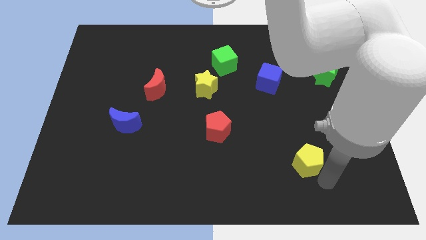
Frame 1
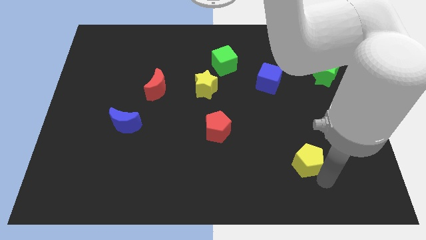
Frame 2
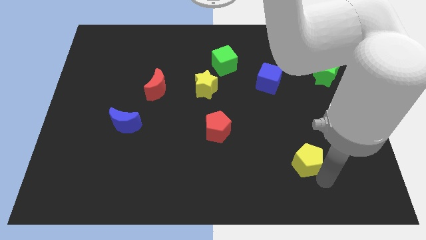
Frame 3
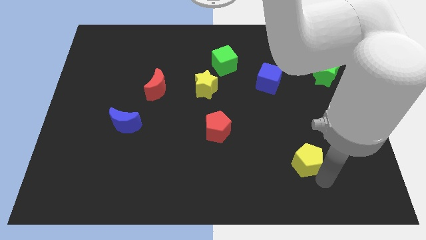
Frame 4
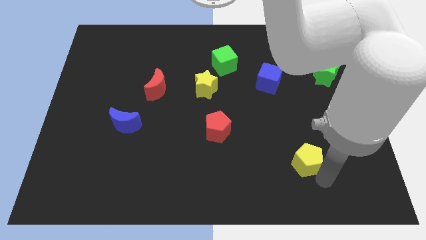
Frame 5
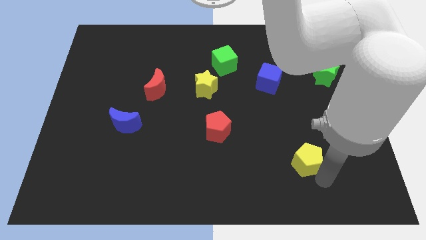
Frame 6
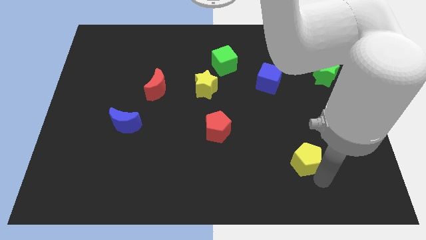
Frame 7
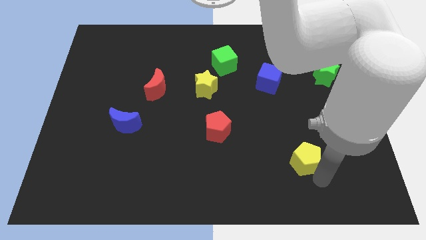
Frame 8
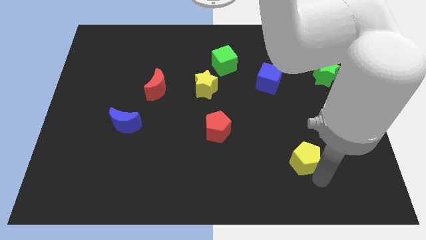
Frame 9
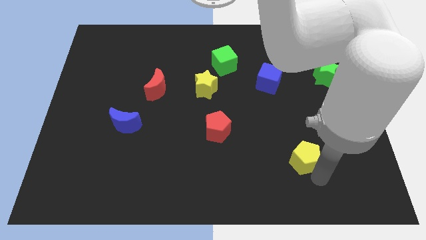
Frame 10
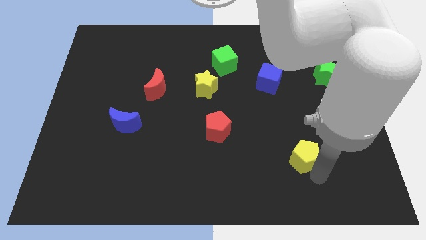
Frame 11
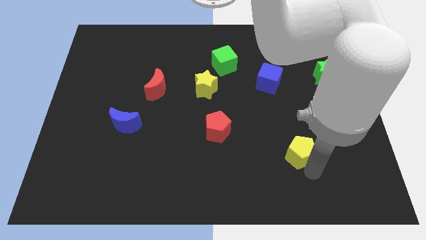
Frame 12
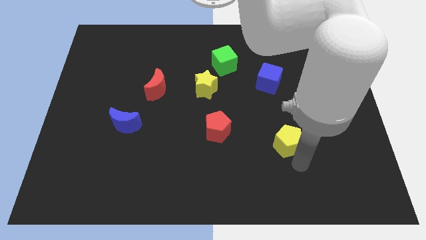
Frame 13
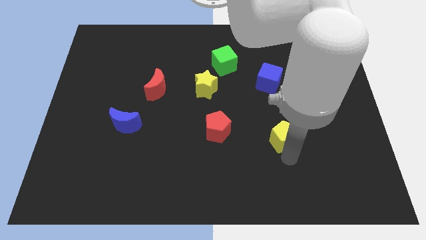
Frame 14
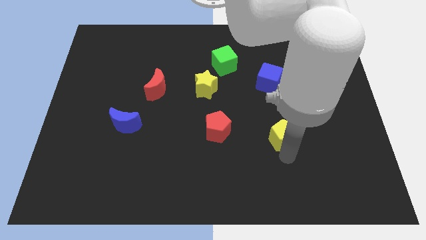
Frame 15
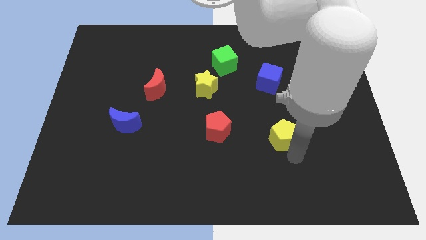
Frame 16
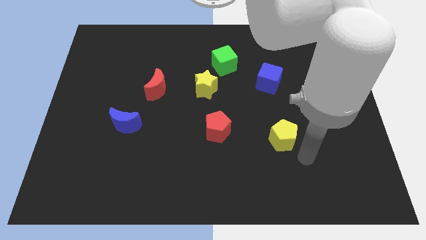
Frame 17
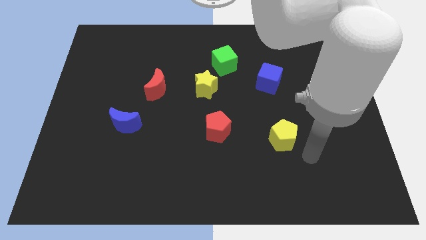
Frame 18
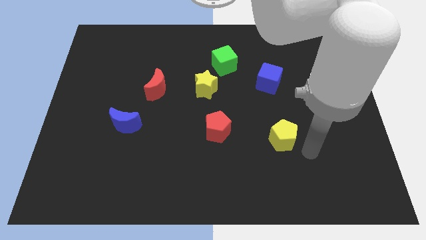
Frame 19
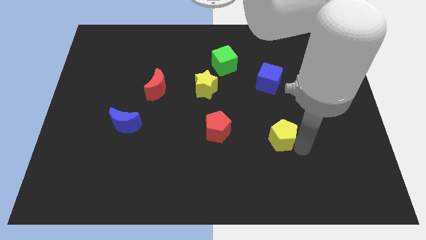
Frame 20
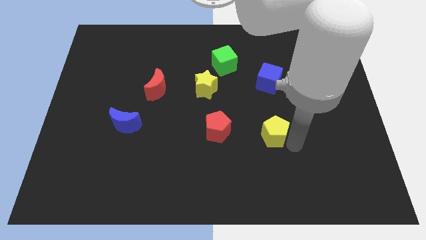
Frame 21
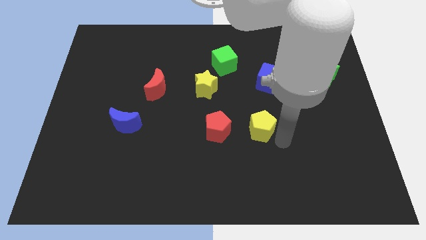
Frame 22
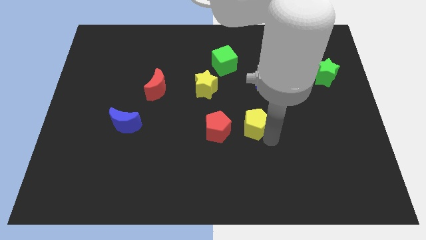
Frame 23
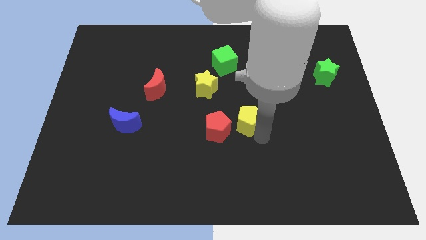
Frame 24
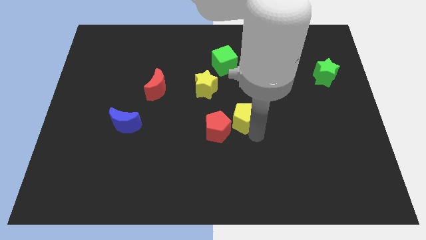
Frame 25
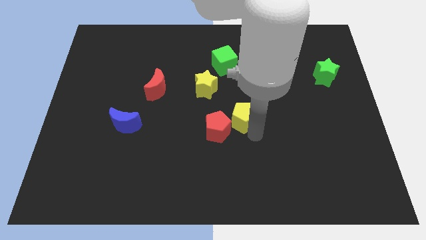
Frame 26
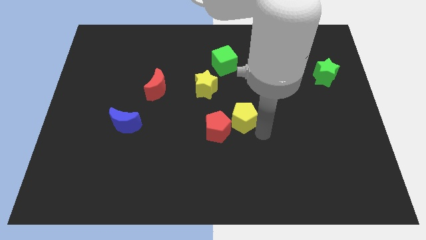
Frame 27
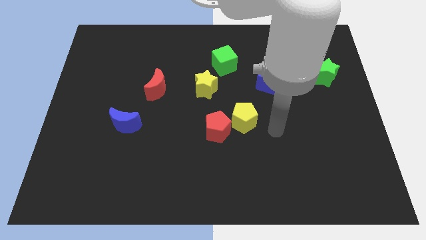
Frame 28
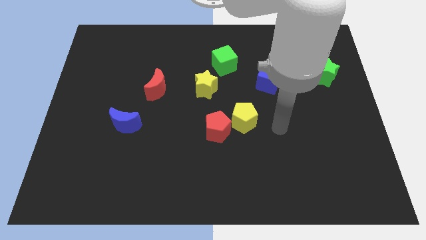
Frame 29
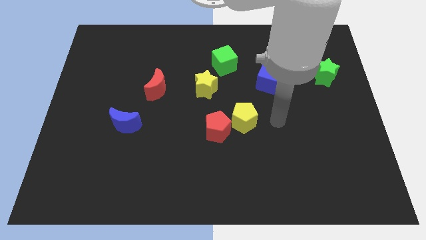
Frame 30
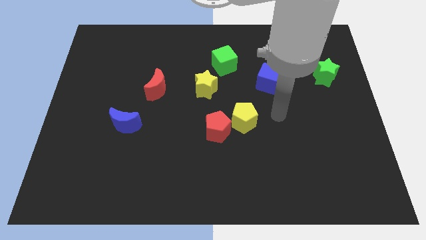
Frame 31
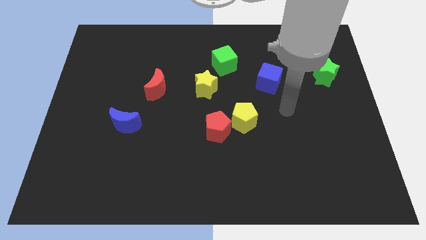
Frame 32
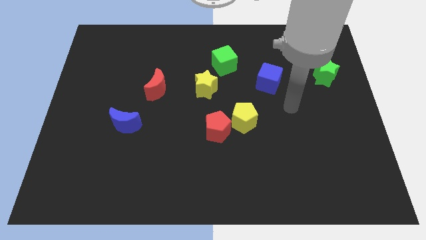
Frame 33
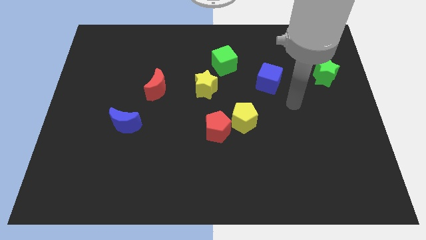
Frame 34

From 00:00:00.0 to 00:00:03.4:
move the yellow pentagon diagonally to the red pentagon

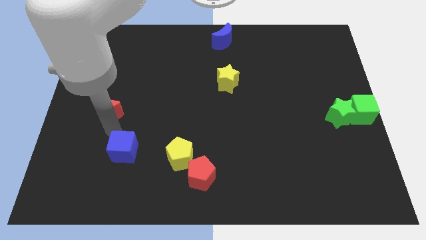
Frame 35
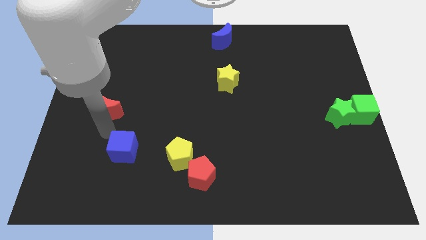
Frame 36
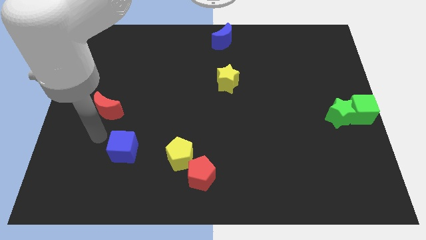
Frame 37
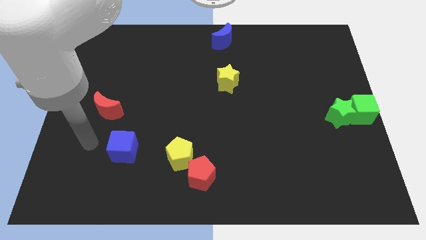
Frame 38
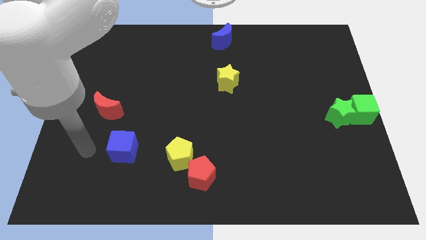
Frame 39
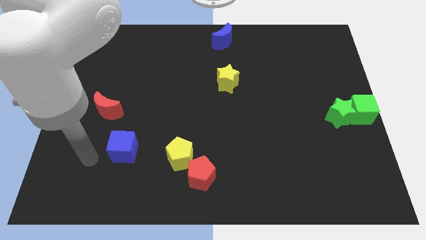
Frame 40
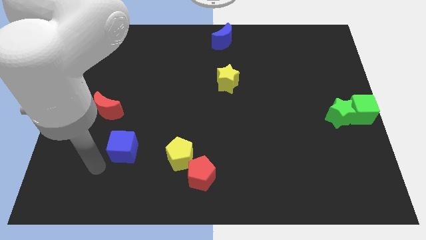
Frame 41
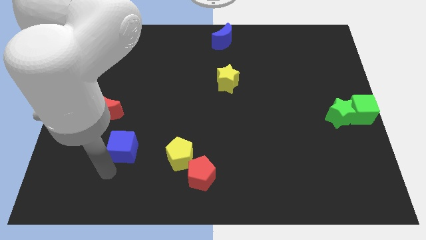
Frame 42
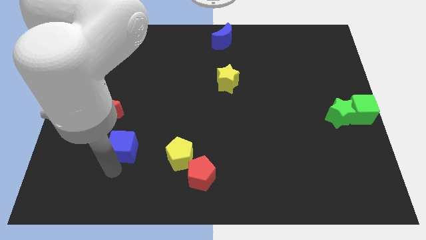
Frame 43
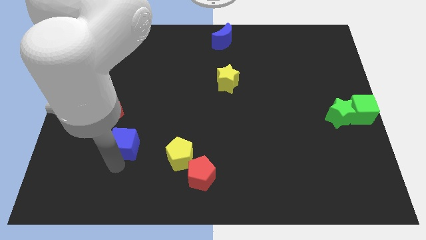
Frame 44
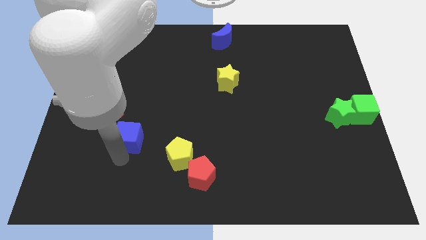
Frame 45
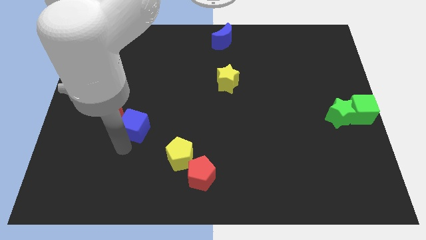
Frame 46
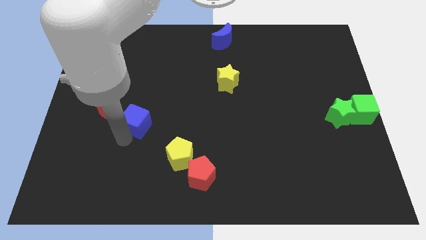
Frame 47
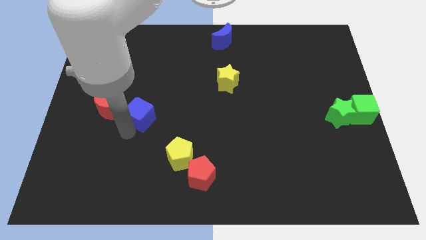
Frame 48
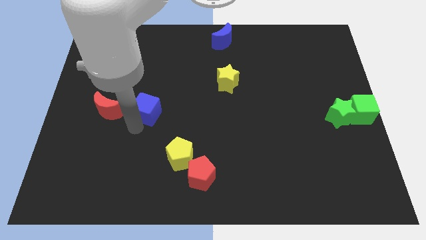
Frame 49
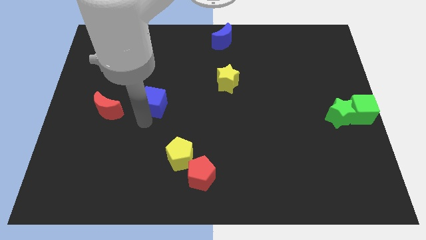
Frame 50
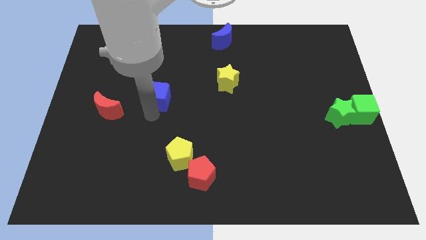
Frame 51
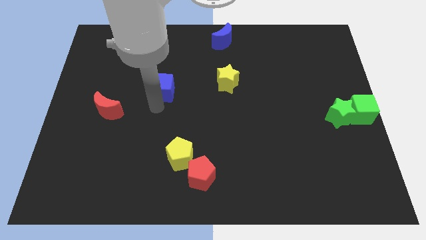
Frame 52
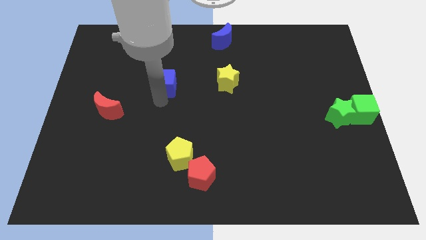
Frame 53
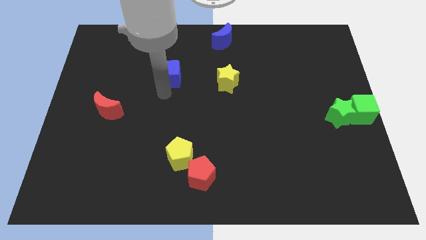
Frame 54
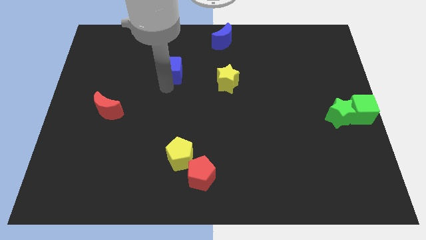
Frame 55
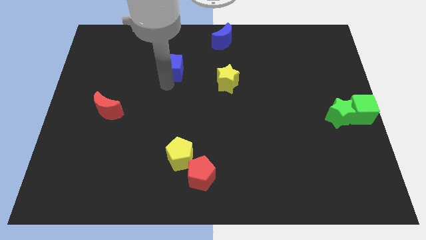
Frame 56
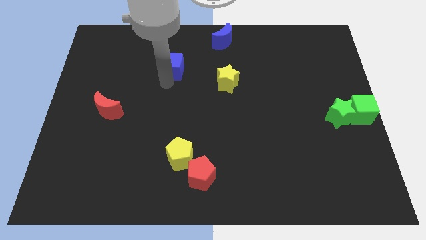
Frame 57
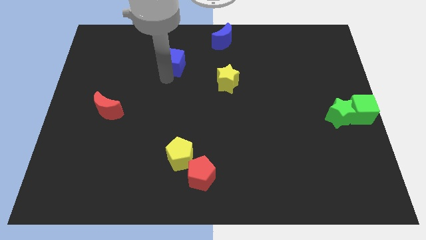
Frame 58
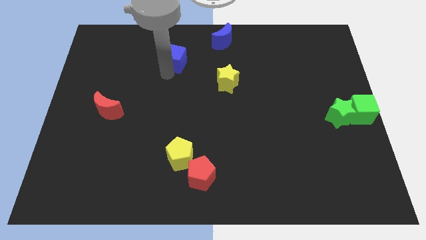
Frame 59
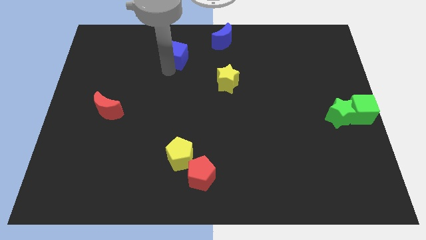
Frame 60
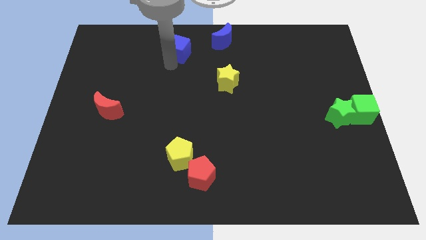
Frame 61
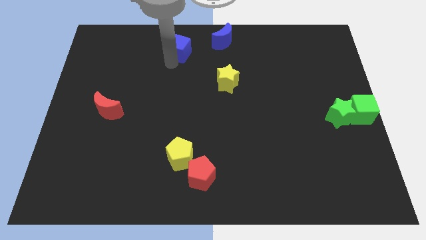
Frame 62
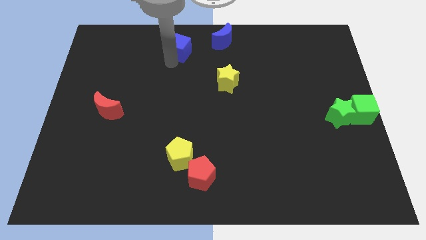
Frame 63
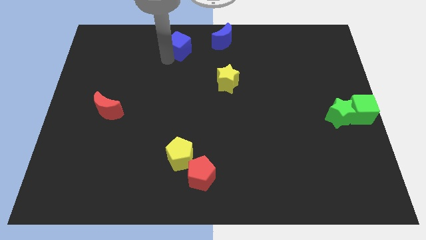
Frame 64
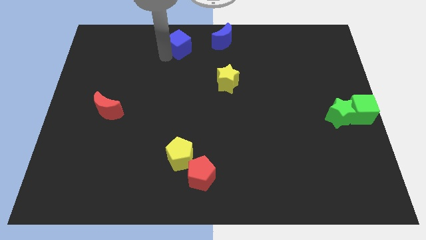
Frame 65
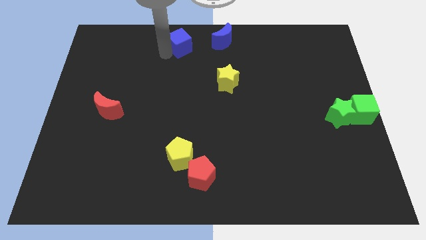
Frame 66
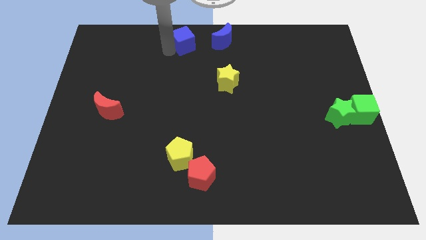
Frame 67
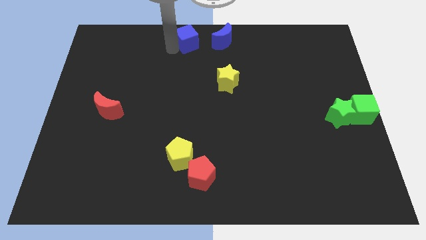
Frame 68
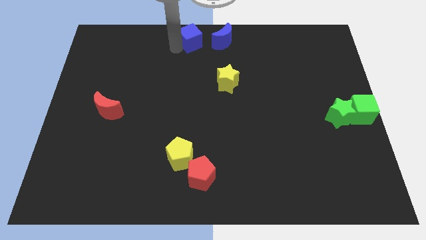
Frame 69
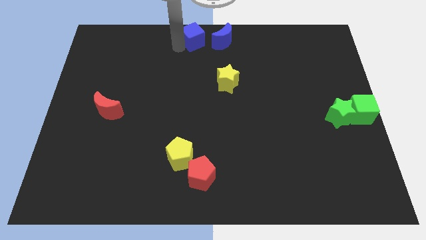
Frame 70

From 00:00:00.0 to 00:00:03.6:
move the blue cube to the left of the blue crescent

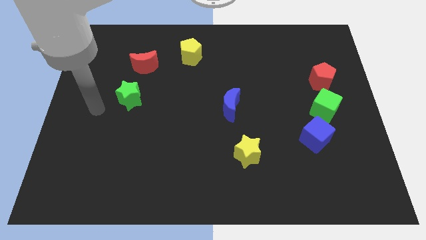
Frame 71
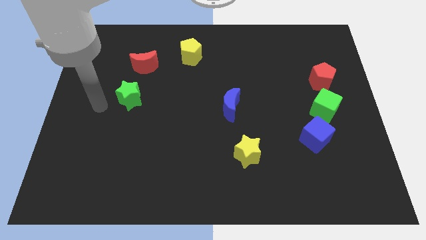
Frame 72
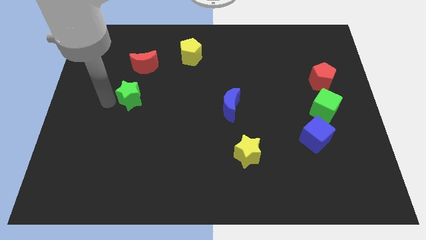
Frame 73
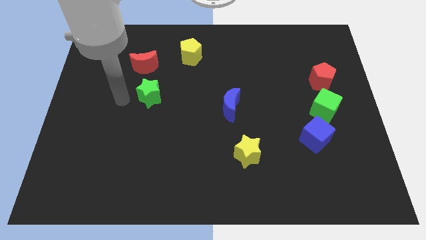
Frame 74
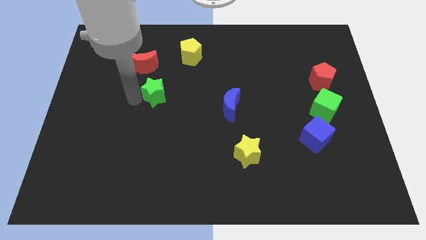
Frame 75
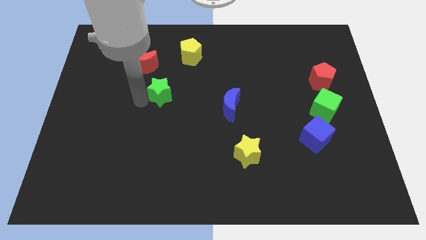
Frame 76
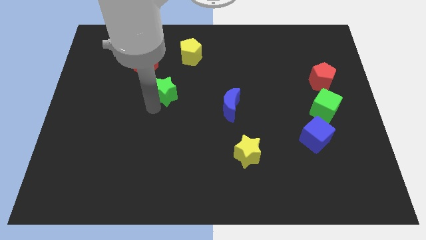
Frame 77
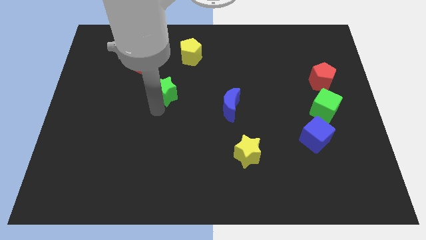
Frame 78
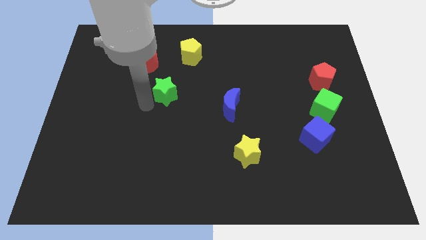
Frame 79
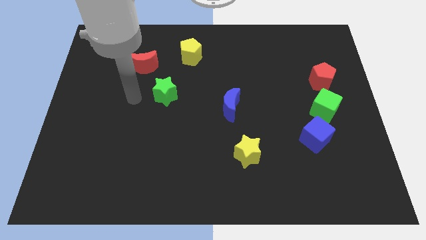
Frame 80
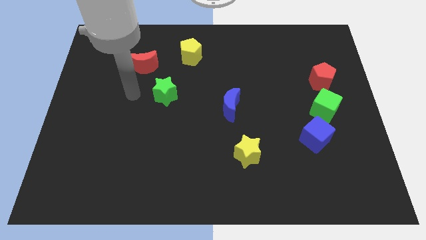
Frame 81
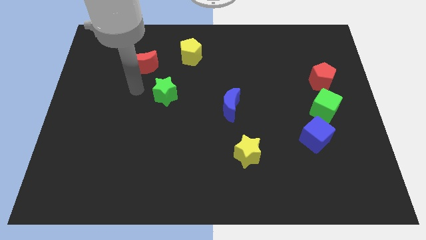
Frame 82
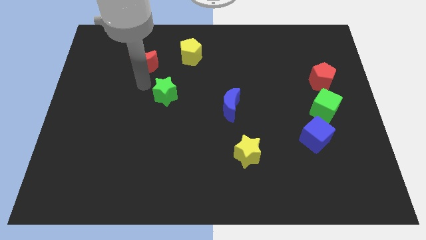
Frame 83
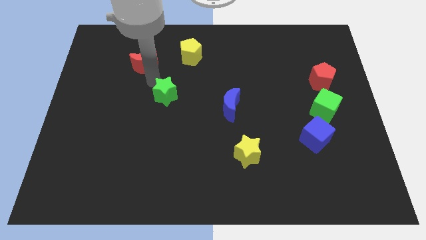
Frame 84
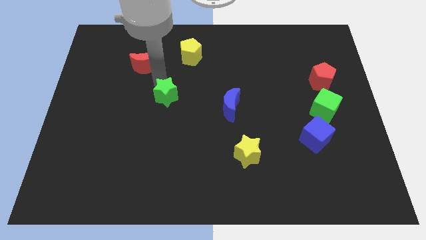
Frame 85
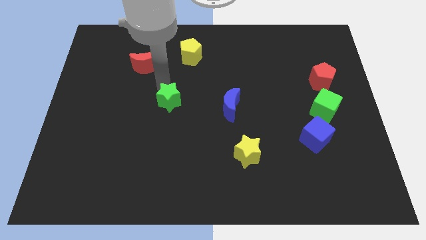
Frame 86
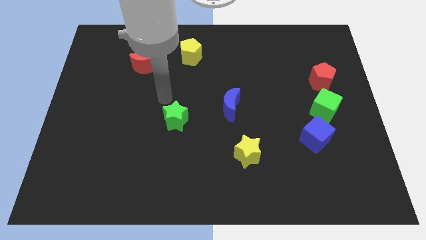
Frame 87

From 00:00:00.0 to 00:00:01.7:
slide green star to the left side of the blue crescent
